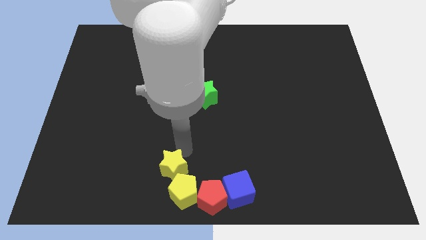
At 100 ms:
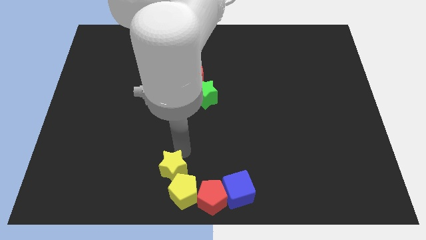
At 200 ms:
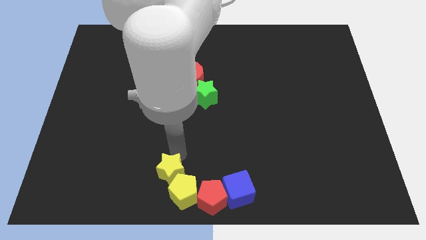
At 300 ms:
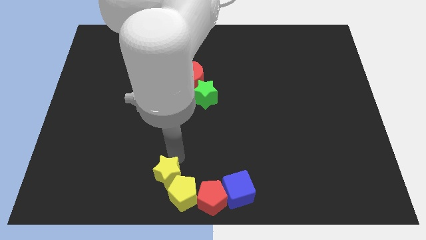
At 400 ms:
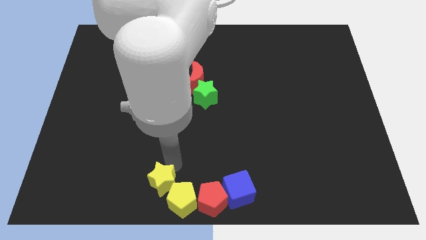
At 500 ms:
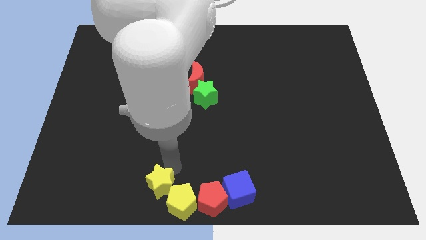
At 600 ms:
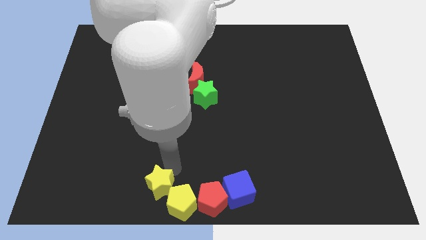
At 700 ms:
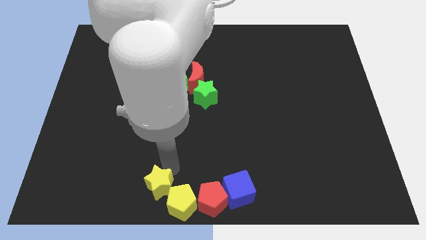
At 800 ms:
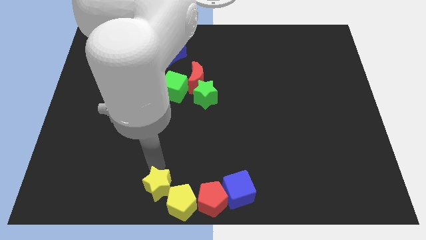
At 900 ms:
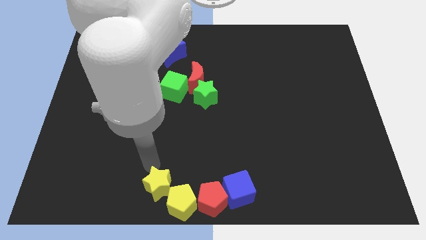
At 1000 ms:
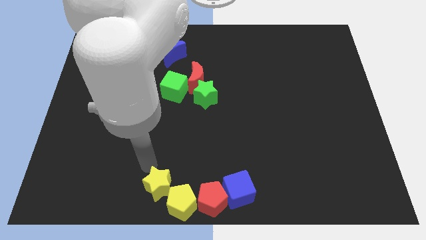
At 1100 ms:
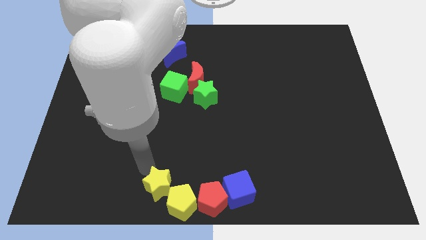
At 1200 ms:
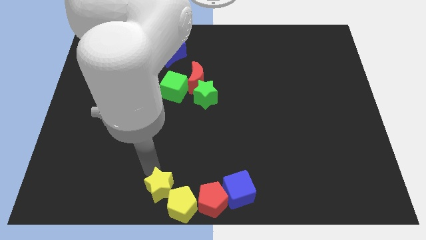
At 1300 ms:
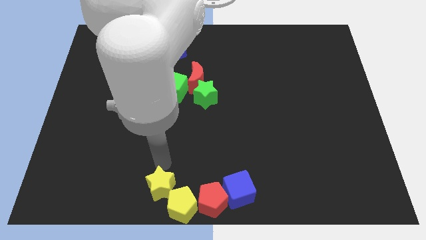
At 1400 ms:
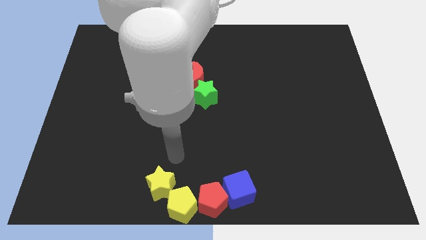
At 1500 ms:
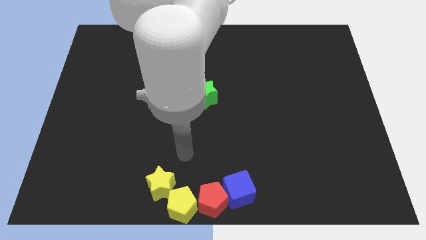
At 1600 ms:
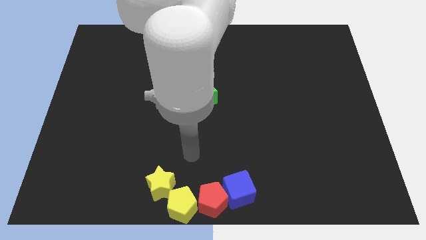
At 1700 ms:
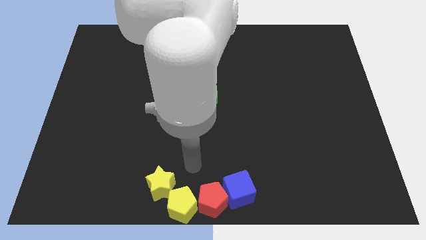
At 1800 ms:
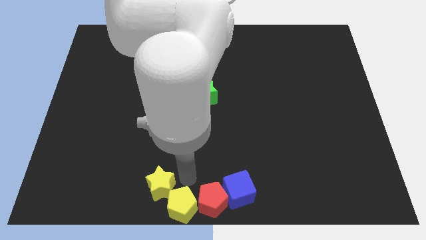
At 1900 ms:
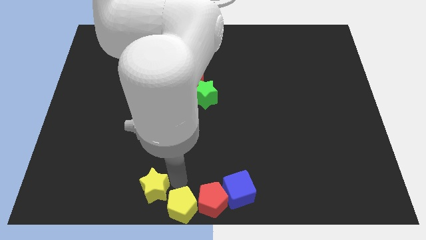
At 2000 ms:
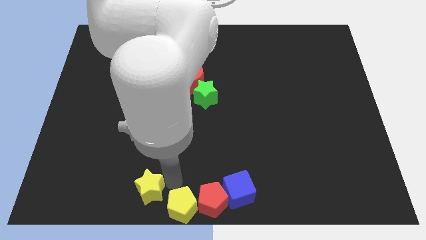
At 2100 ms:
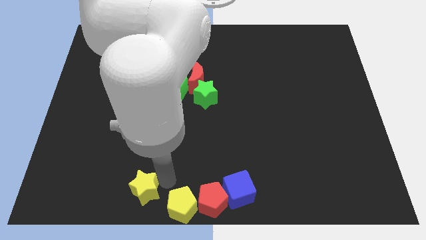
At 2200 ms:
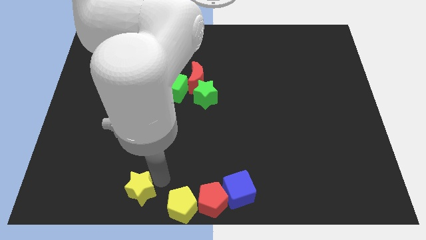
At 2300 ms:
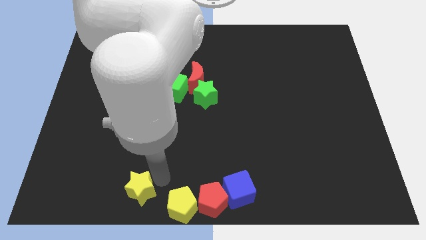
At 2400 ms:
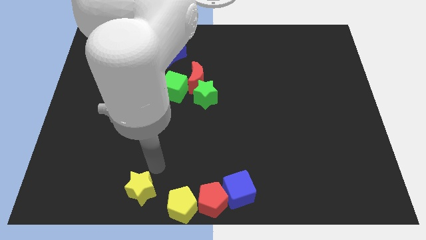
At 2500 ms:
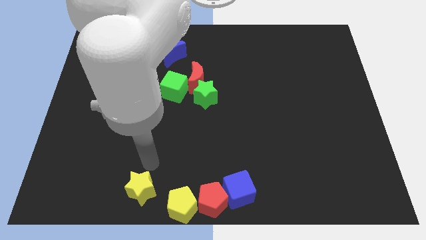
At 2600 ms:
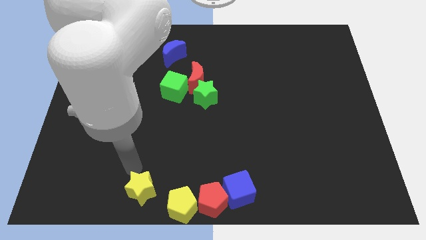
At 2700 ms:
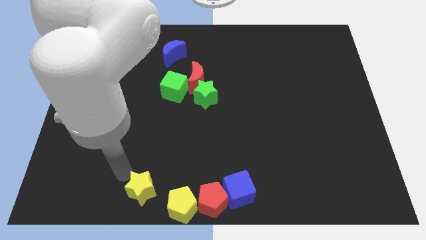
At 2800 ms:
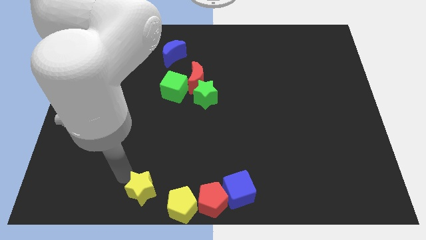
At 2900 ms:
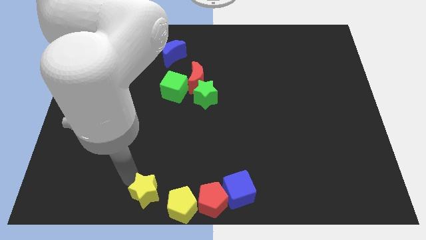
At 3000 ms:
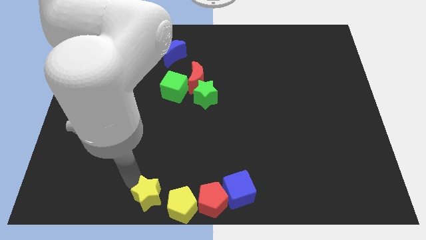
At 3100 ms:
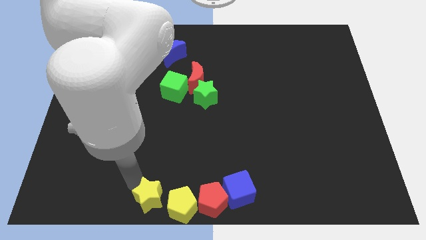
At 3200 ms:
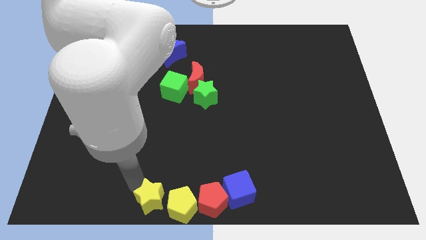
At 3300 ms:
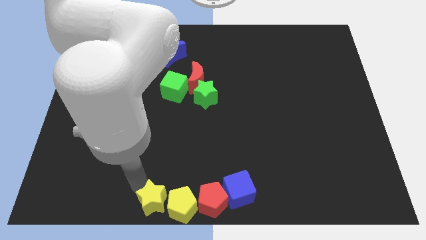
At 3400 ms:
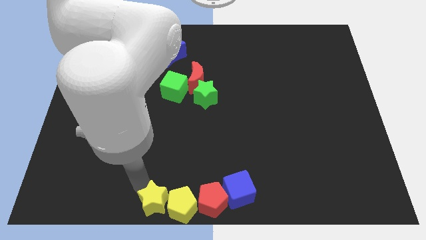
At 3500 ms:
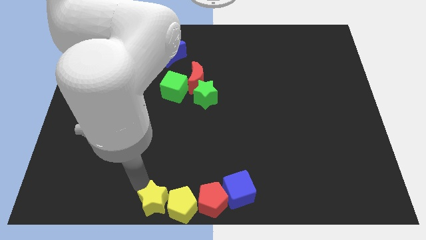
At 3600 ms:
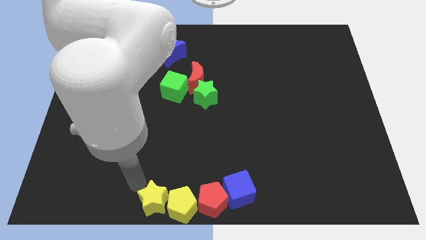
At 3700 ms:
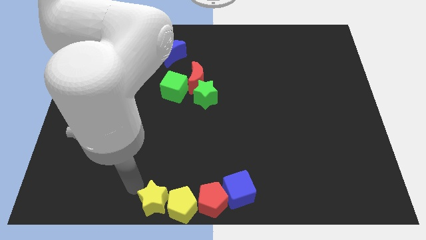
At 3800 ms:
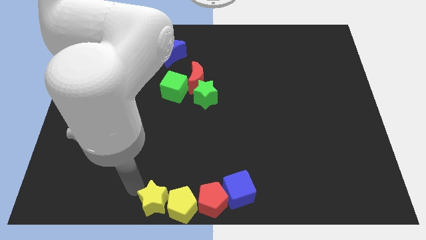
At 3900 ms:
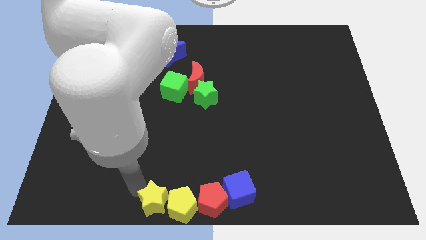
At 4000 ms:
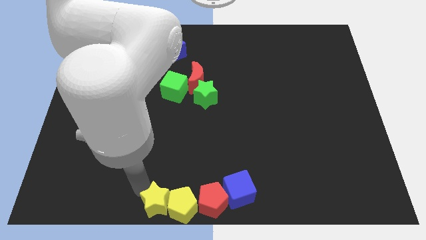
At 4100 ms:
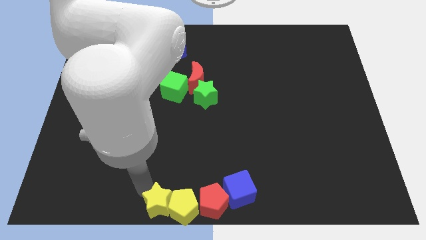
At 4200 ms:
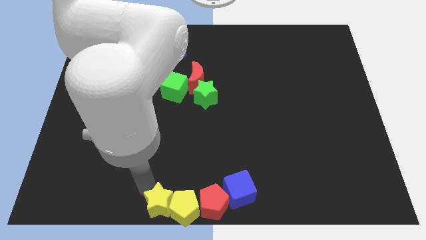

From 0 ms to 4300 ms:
move the yellow star left to the yellow pentagon

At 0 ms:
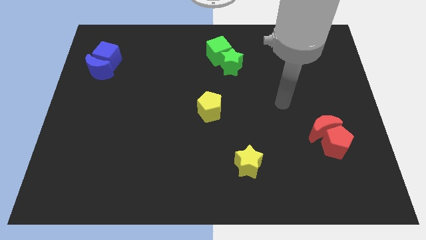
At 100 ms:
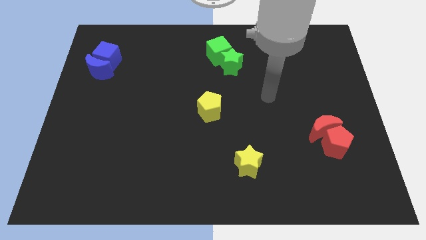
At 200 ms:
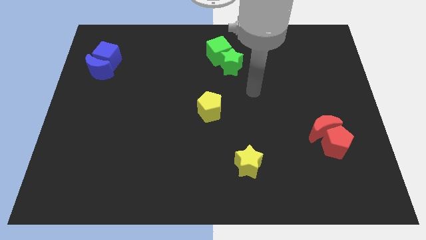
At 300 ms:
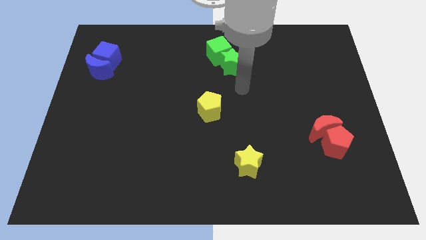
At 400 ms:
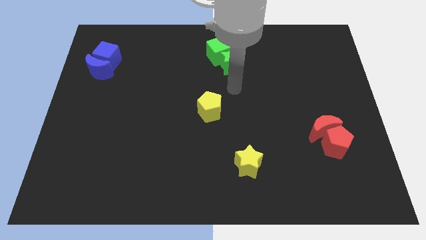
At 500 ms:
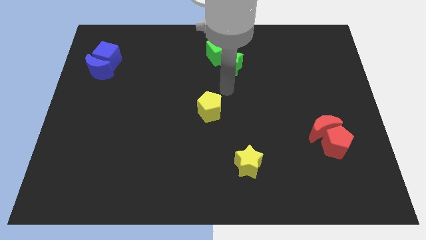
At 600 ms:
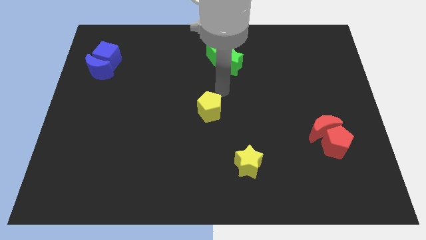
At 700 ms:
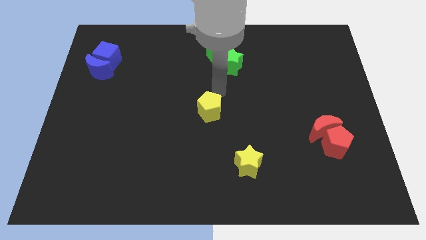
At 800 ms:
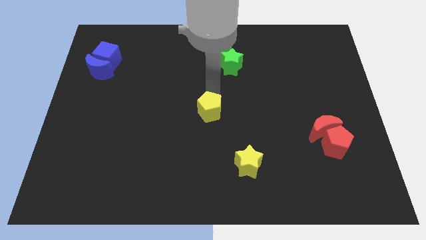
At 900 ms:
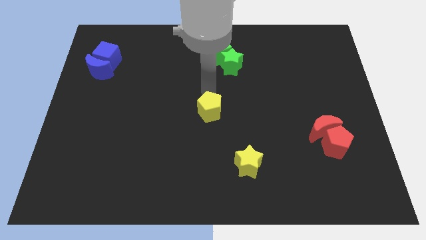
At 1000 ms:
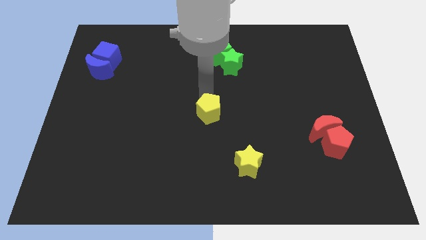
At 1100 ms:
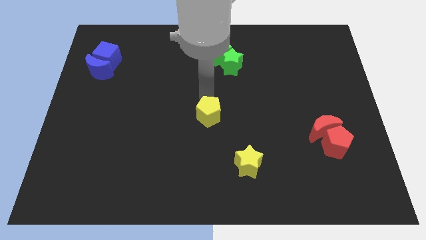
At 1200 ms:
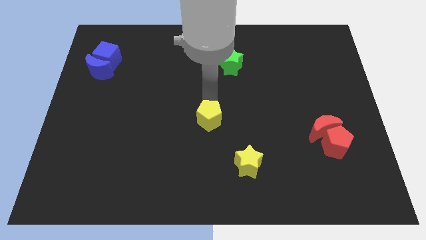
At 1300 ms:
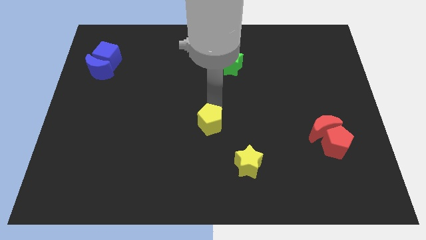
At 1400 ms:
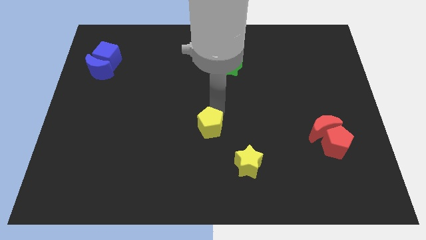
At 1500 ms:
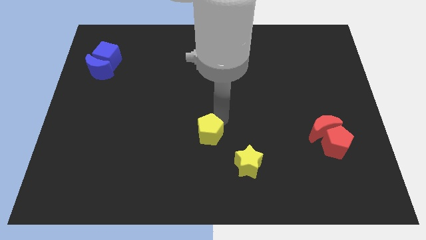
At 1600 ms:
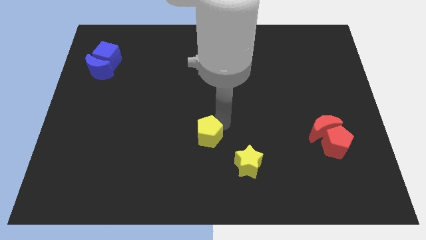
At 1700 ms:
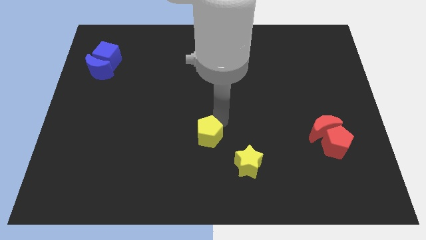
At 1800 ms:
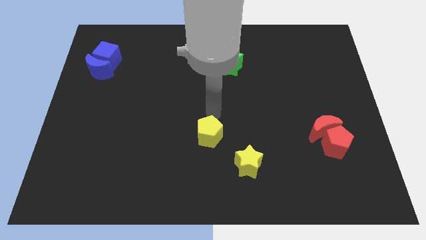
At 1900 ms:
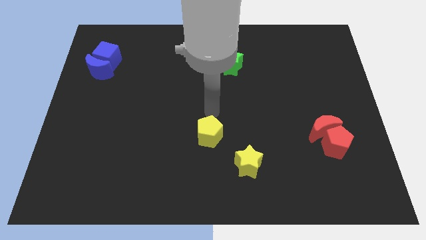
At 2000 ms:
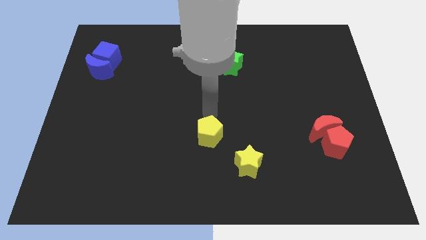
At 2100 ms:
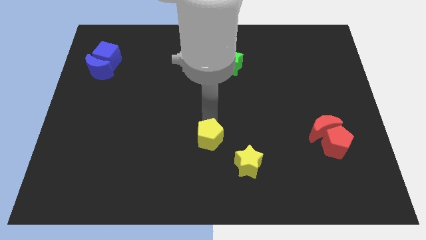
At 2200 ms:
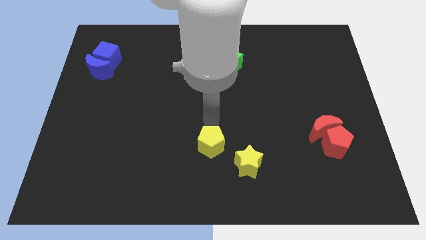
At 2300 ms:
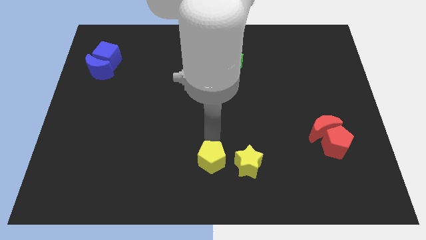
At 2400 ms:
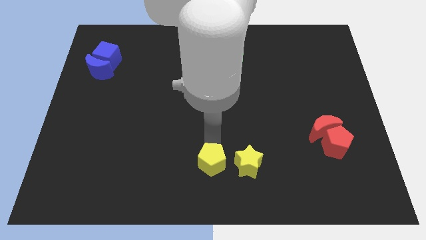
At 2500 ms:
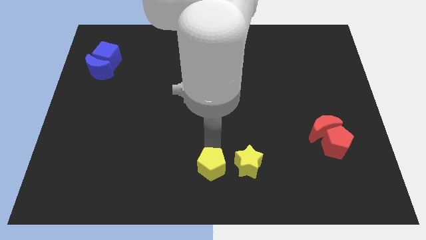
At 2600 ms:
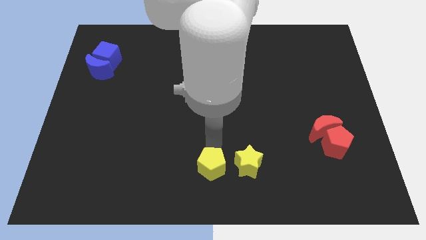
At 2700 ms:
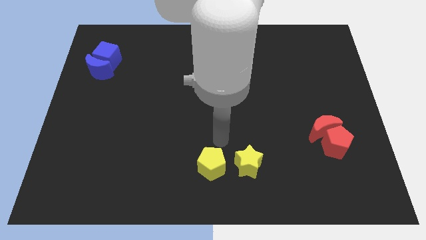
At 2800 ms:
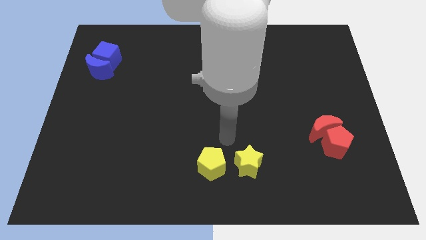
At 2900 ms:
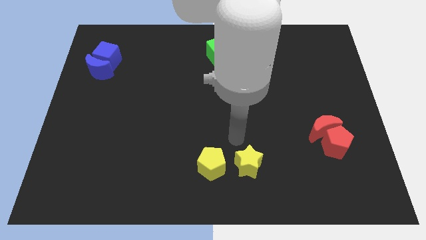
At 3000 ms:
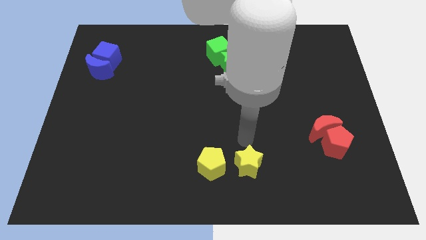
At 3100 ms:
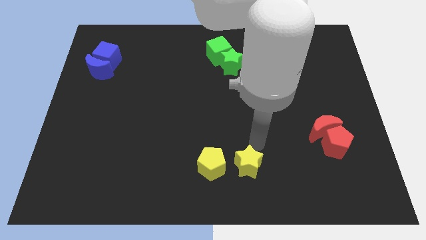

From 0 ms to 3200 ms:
move the yellow pentagon to the bottom center of the board

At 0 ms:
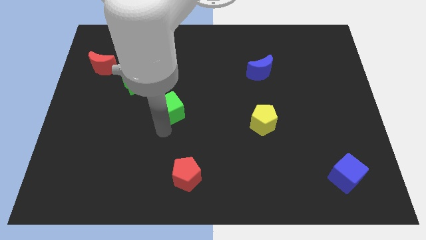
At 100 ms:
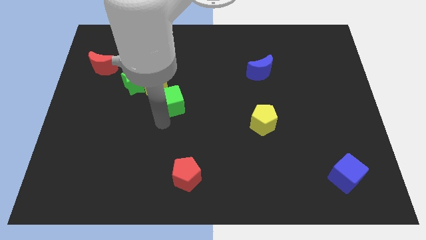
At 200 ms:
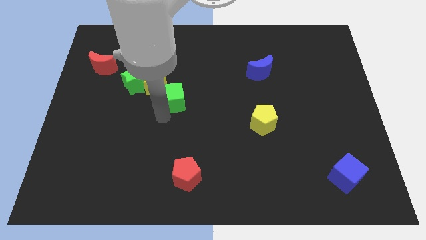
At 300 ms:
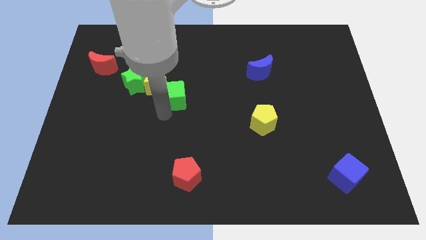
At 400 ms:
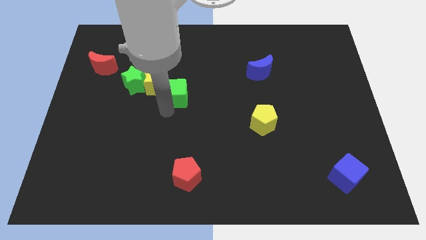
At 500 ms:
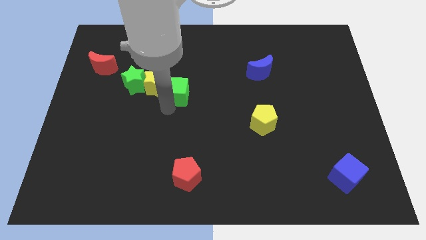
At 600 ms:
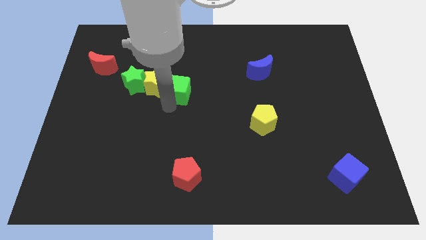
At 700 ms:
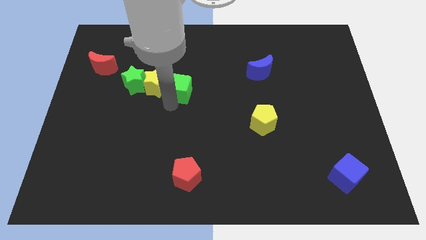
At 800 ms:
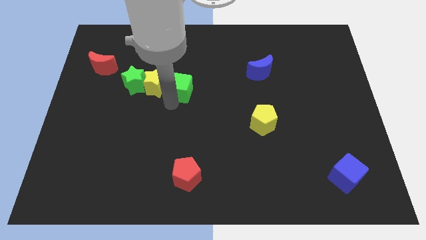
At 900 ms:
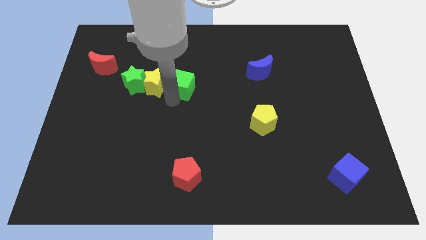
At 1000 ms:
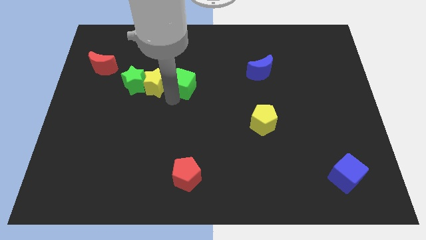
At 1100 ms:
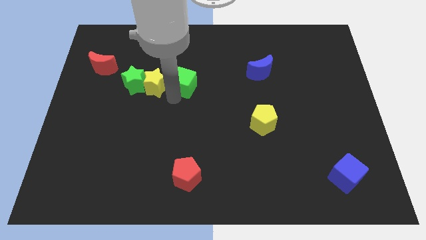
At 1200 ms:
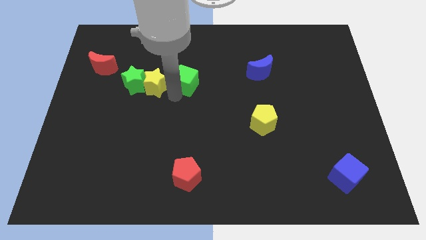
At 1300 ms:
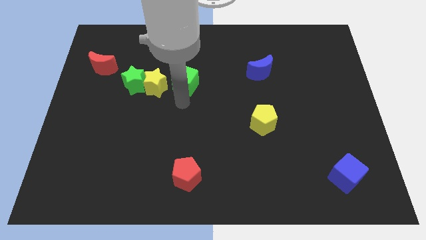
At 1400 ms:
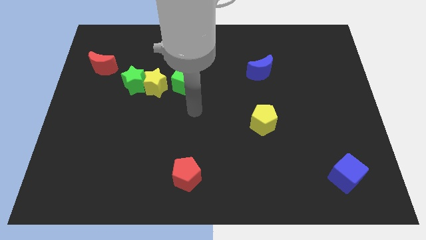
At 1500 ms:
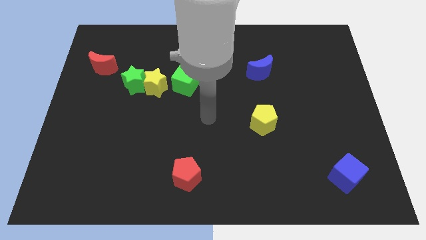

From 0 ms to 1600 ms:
place the green cube parallel right to the yellow star
